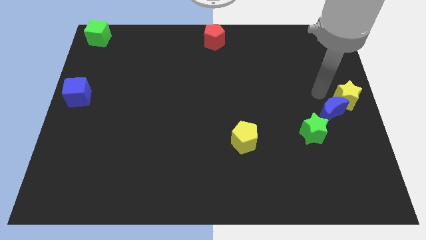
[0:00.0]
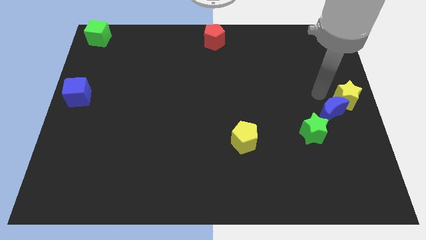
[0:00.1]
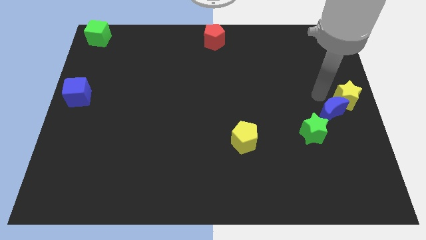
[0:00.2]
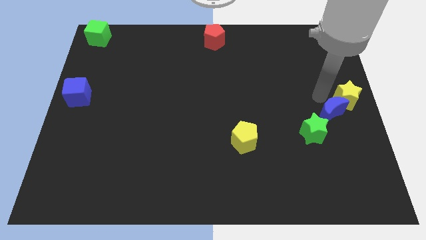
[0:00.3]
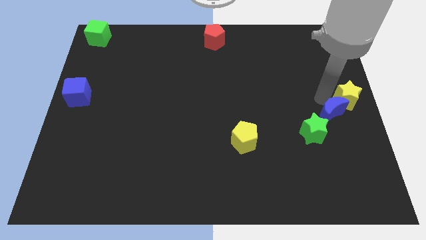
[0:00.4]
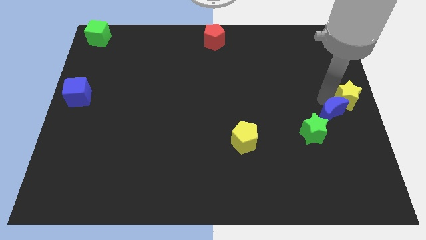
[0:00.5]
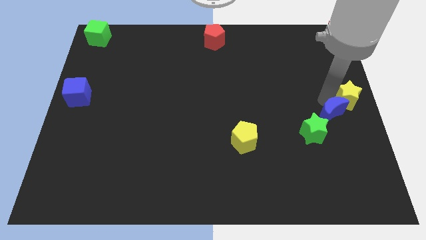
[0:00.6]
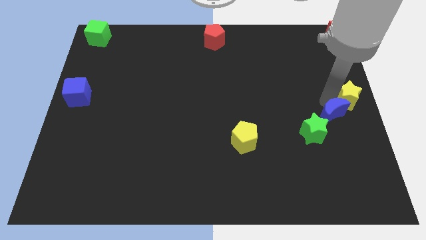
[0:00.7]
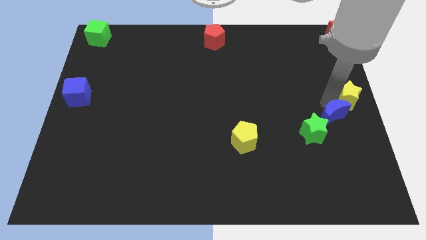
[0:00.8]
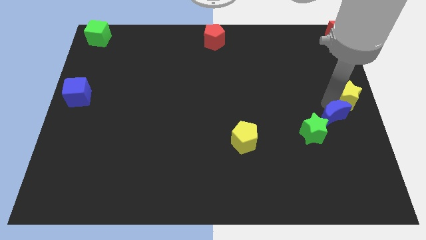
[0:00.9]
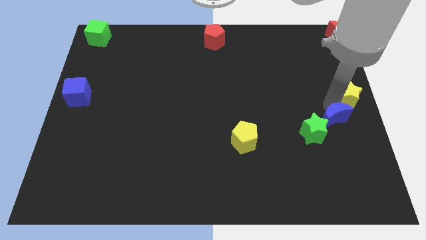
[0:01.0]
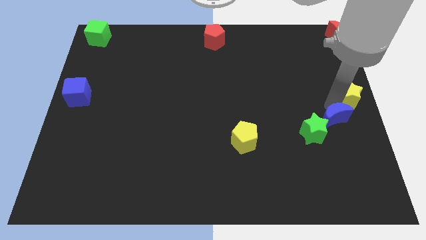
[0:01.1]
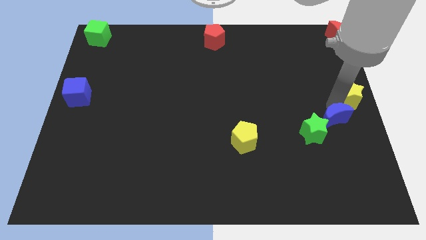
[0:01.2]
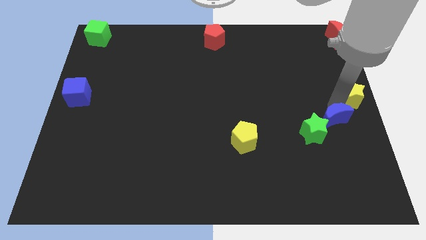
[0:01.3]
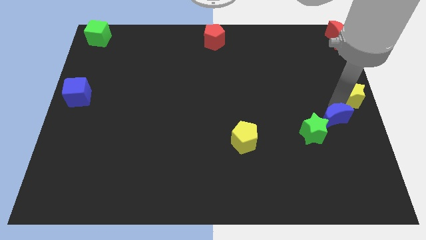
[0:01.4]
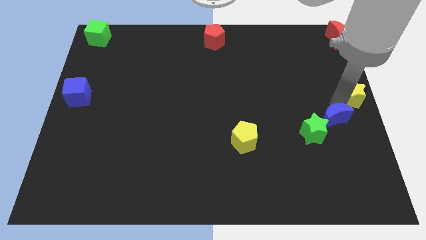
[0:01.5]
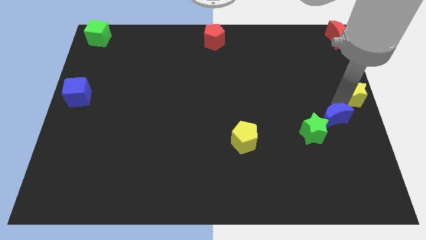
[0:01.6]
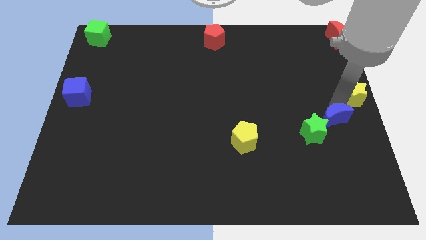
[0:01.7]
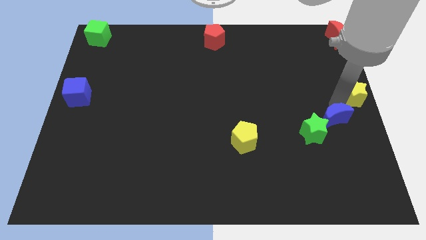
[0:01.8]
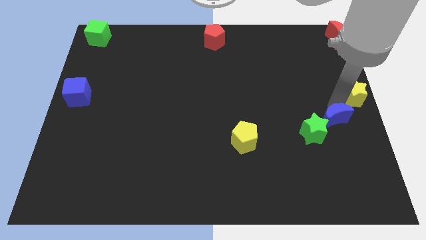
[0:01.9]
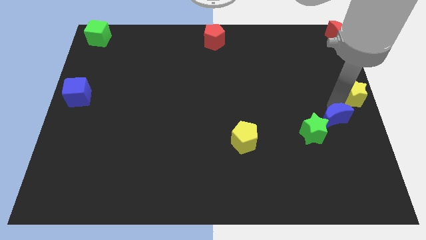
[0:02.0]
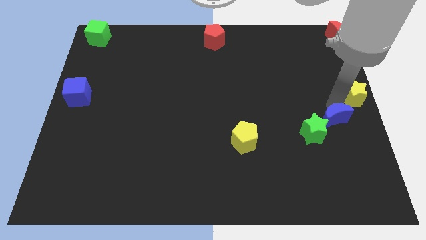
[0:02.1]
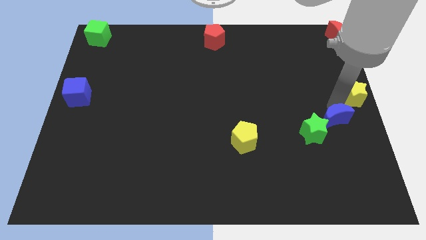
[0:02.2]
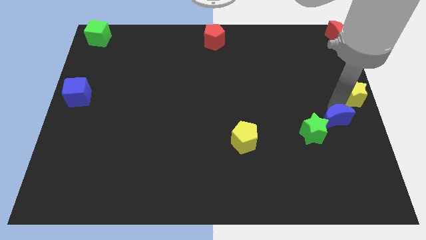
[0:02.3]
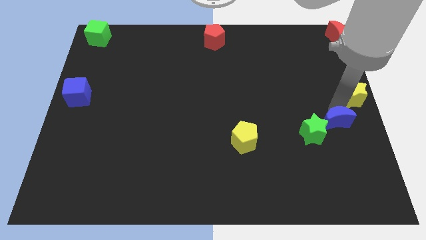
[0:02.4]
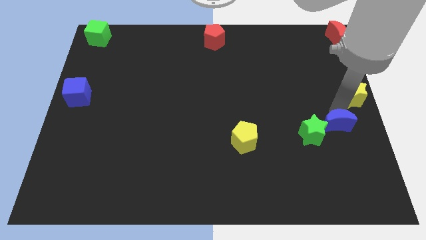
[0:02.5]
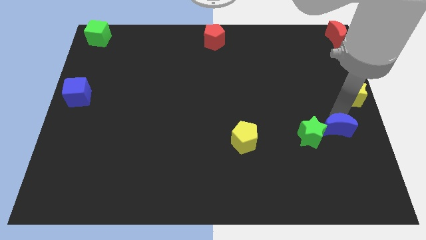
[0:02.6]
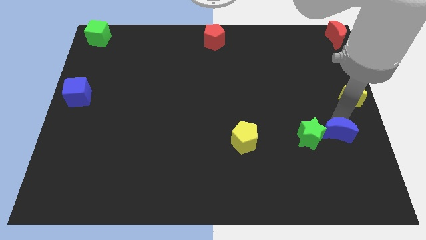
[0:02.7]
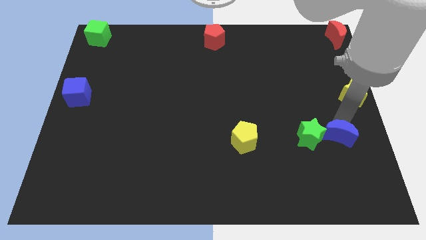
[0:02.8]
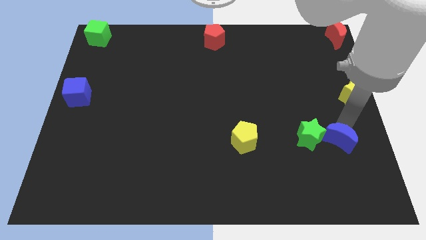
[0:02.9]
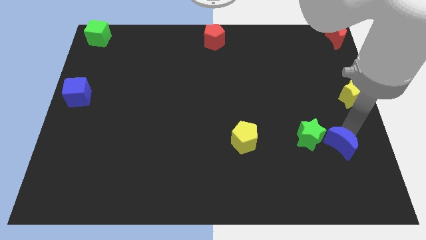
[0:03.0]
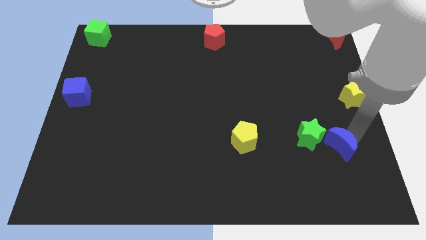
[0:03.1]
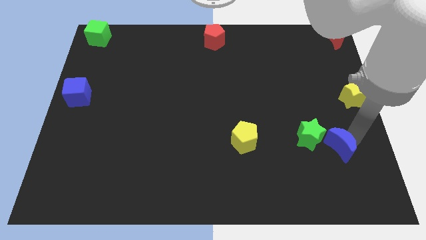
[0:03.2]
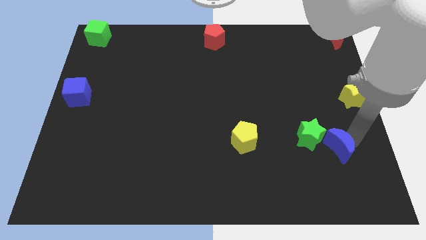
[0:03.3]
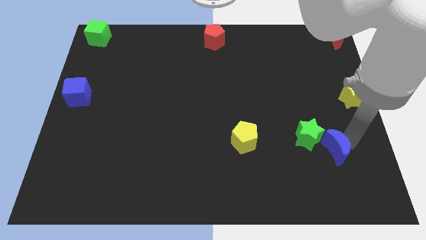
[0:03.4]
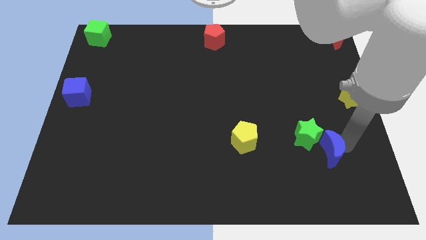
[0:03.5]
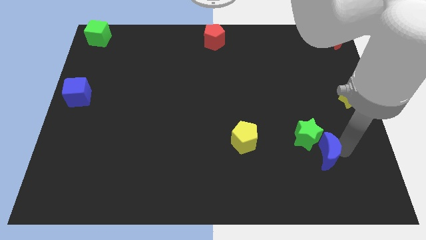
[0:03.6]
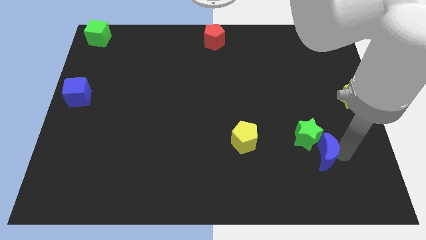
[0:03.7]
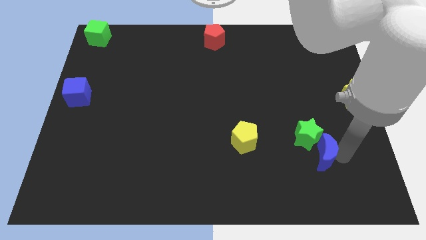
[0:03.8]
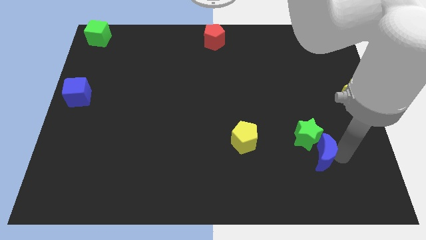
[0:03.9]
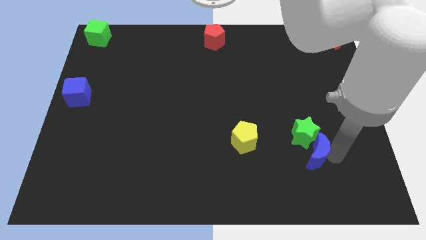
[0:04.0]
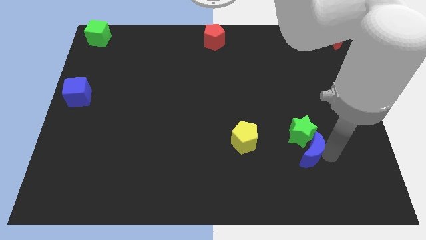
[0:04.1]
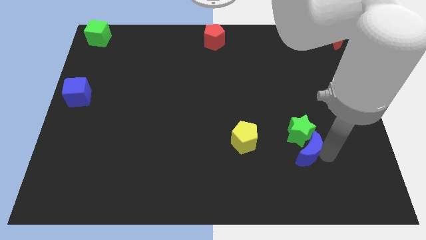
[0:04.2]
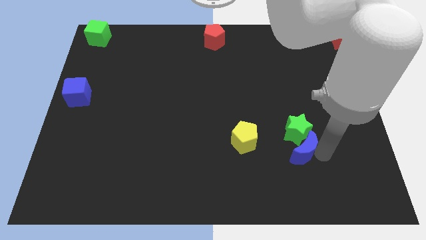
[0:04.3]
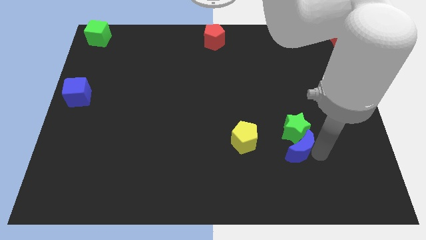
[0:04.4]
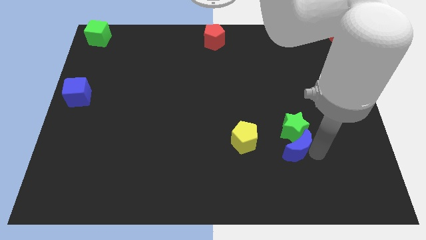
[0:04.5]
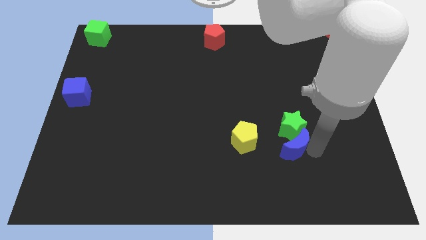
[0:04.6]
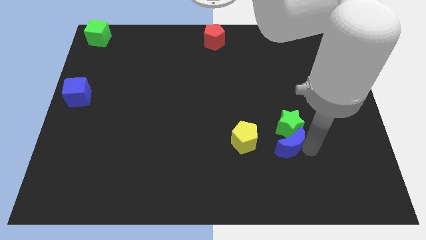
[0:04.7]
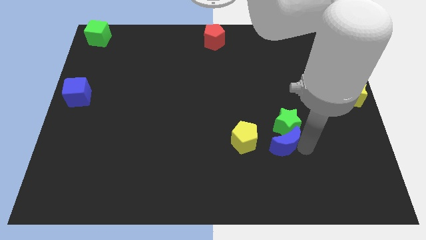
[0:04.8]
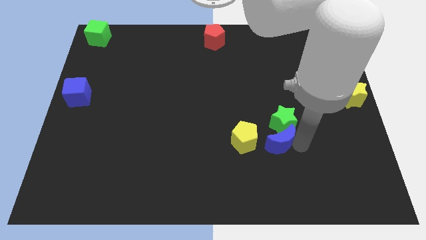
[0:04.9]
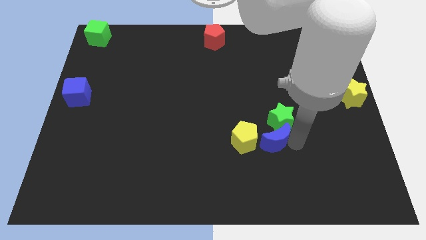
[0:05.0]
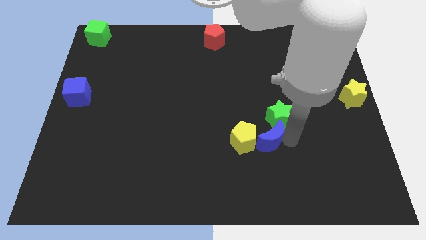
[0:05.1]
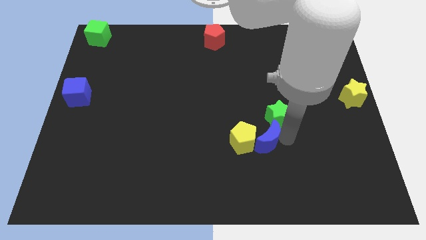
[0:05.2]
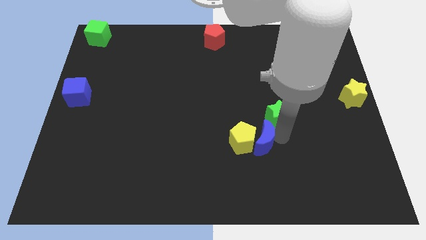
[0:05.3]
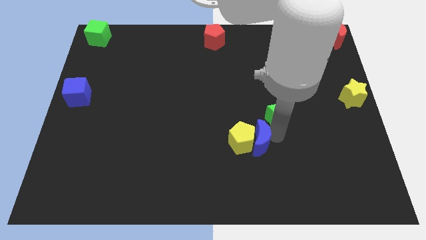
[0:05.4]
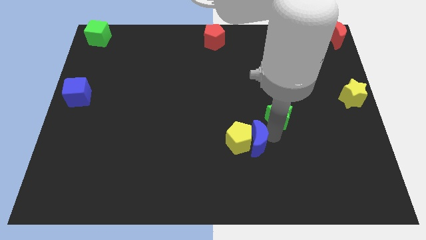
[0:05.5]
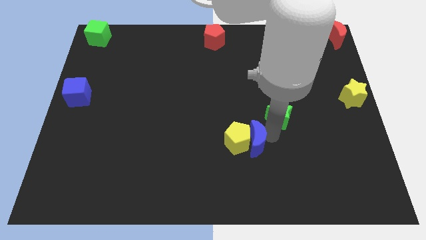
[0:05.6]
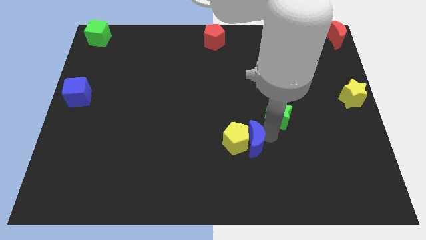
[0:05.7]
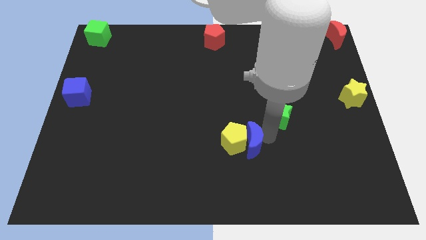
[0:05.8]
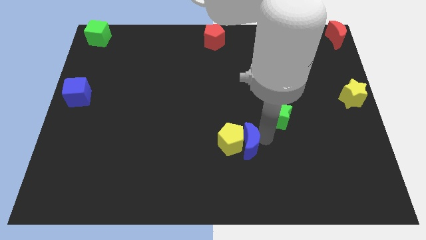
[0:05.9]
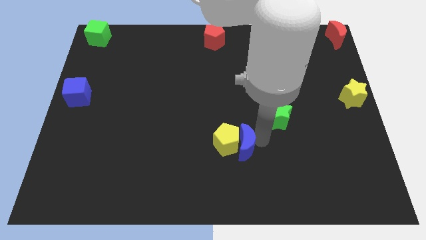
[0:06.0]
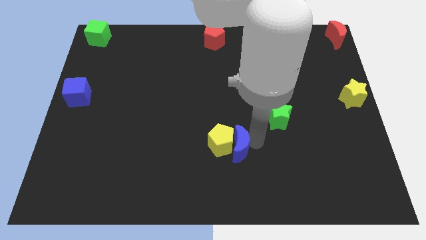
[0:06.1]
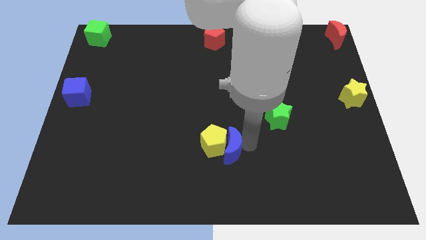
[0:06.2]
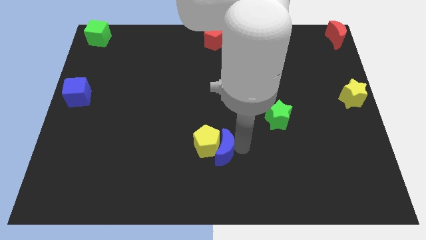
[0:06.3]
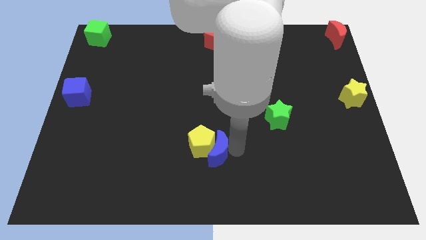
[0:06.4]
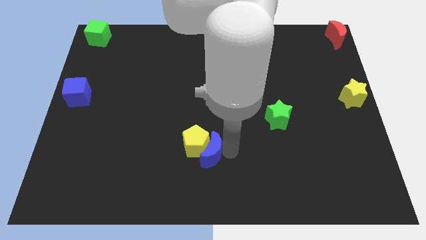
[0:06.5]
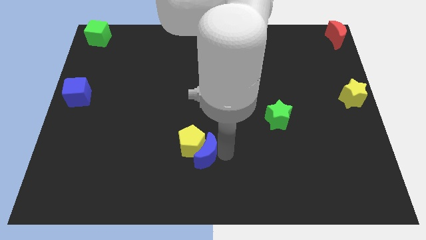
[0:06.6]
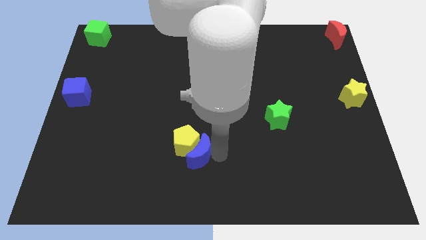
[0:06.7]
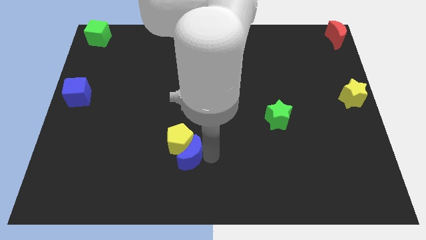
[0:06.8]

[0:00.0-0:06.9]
push the blue crescent into the yellow pentagon

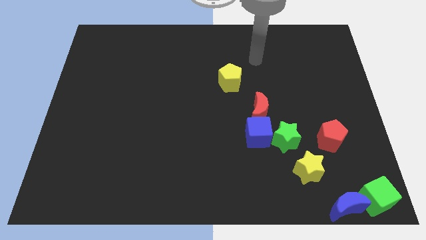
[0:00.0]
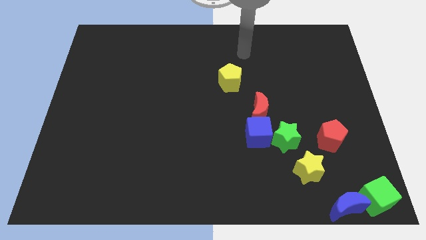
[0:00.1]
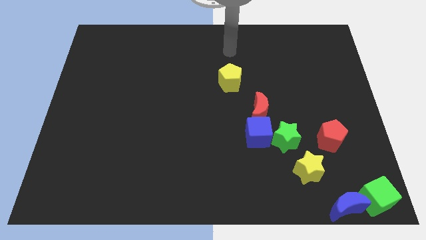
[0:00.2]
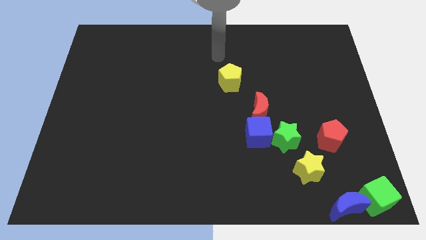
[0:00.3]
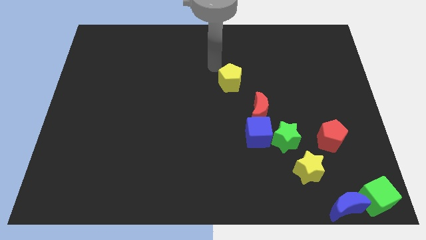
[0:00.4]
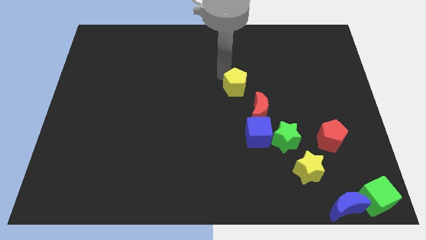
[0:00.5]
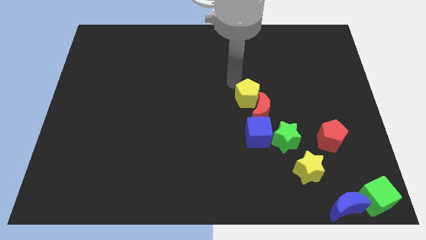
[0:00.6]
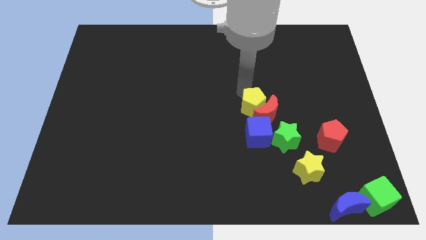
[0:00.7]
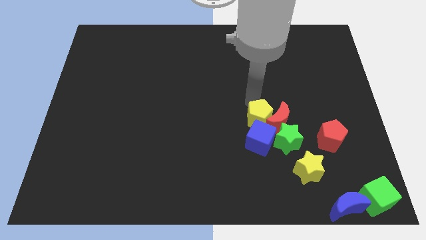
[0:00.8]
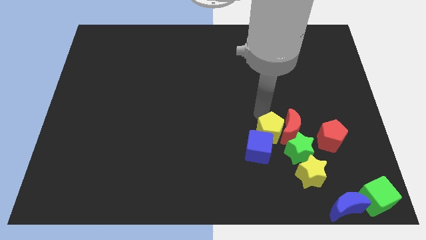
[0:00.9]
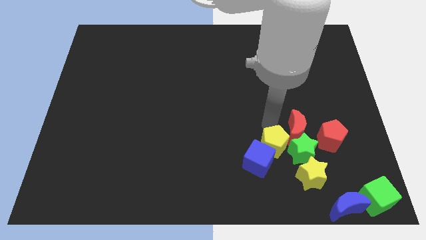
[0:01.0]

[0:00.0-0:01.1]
push yellow pentagon into the group of blocks

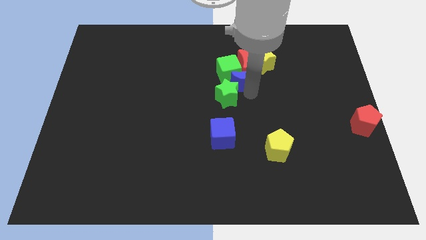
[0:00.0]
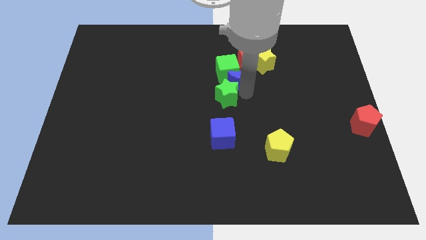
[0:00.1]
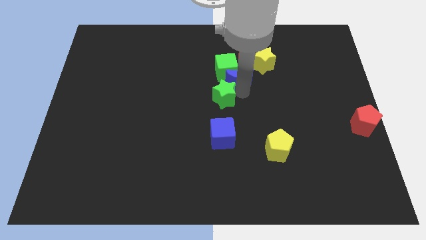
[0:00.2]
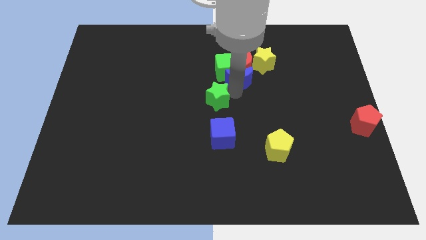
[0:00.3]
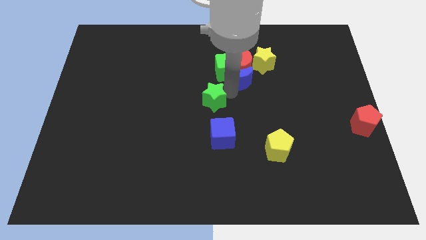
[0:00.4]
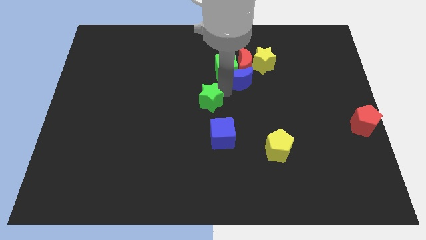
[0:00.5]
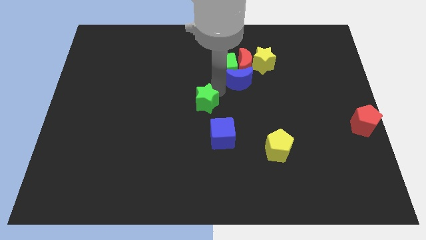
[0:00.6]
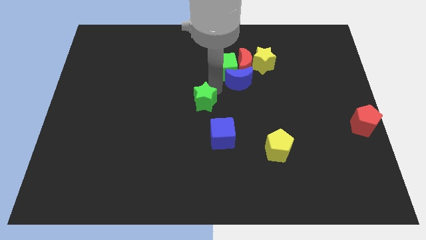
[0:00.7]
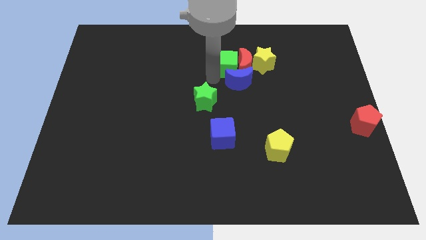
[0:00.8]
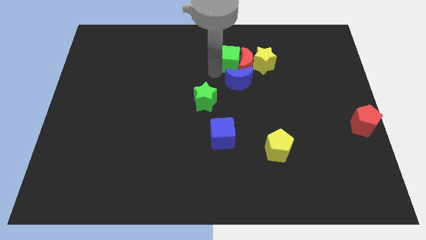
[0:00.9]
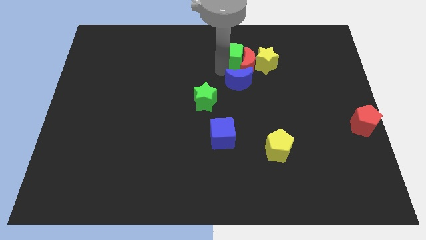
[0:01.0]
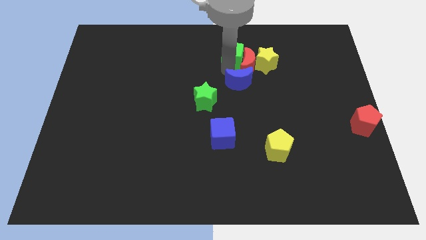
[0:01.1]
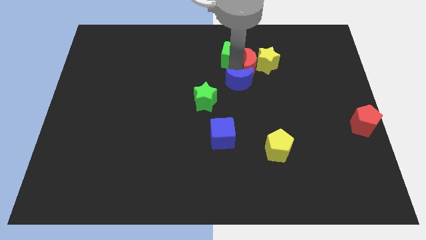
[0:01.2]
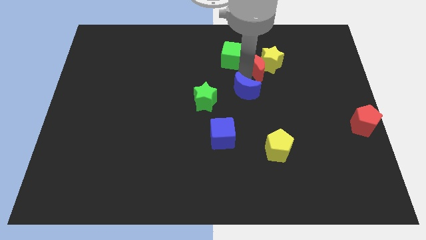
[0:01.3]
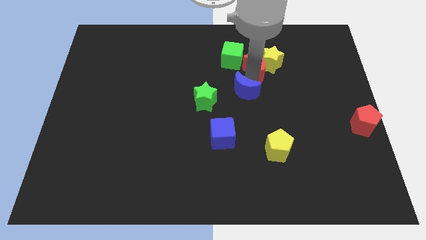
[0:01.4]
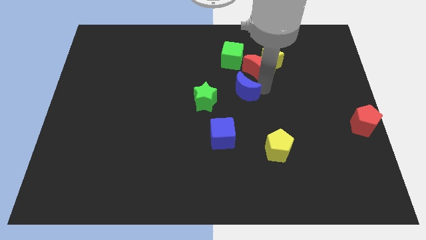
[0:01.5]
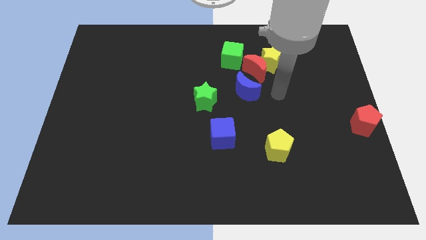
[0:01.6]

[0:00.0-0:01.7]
separate the blue crescent with the group of blocks
